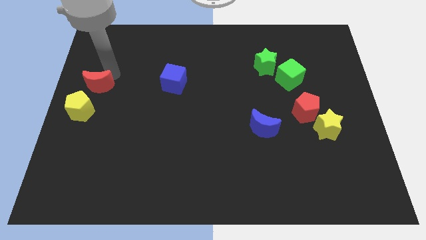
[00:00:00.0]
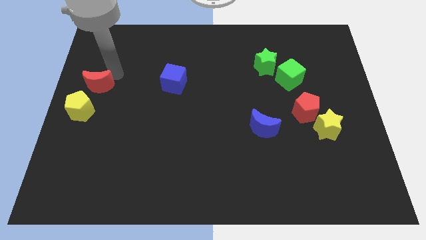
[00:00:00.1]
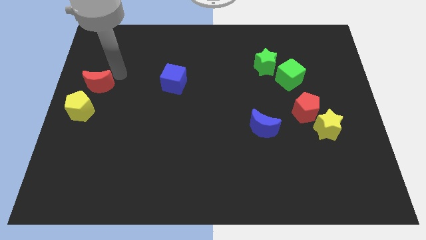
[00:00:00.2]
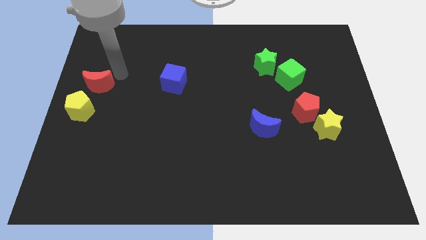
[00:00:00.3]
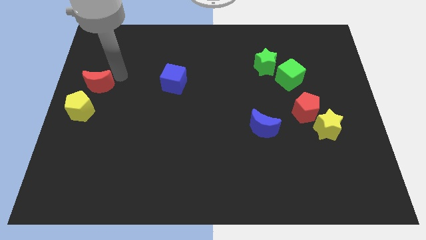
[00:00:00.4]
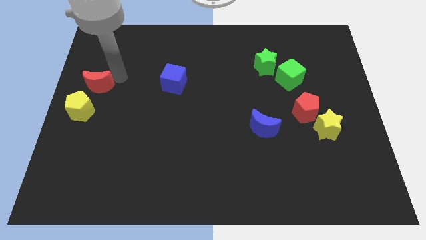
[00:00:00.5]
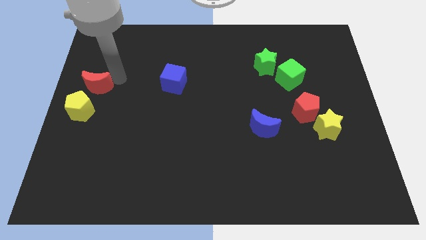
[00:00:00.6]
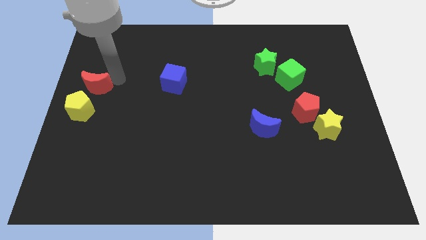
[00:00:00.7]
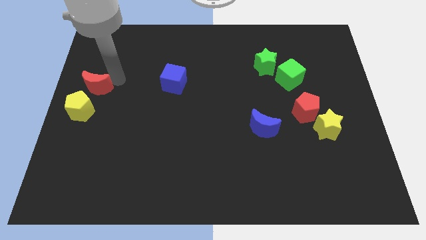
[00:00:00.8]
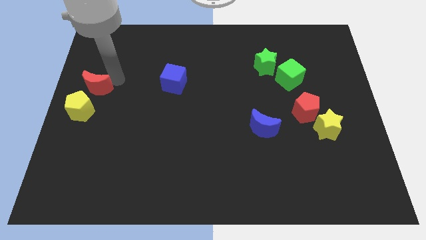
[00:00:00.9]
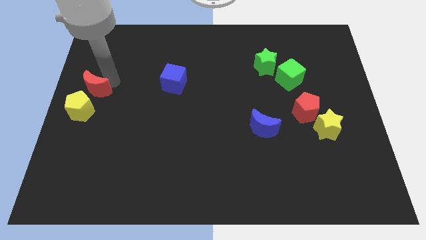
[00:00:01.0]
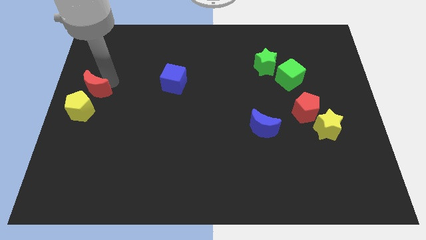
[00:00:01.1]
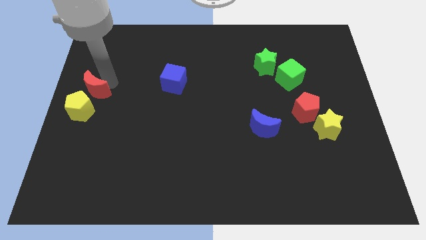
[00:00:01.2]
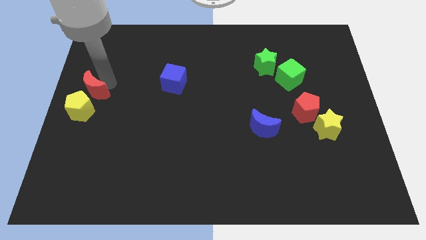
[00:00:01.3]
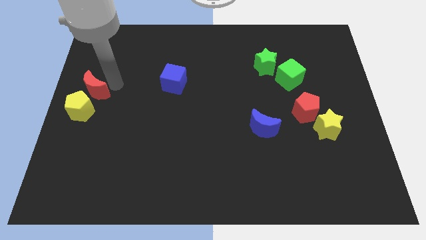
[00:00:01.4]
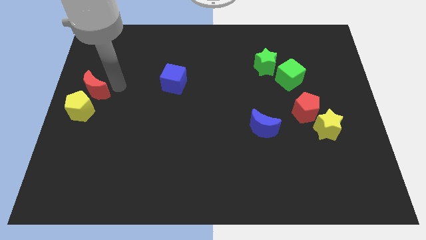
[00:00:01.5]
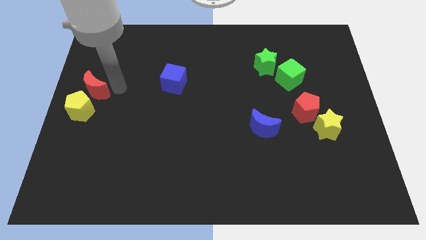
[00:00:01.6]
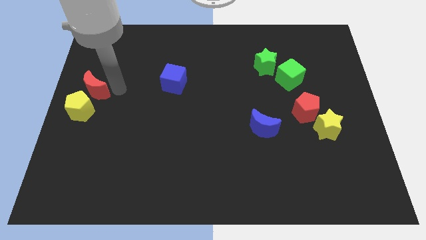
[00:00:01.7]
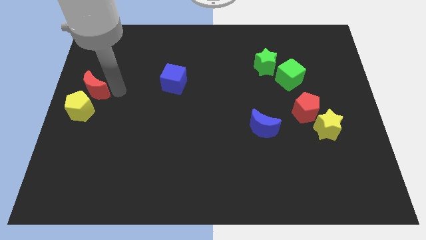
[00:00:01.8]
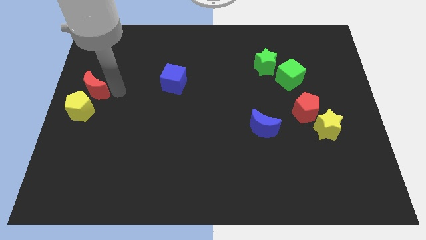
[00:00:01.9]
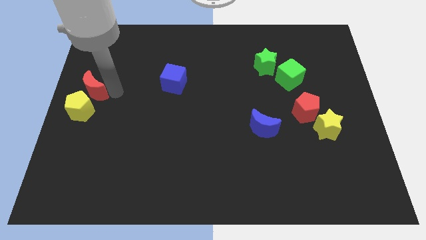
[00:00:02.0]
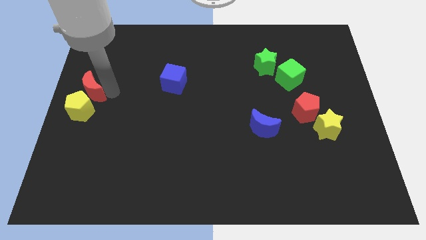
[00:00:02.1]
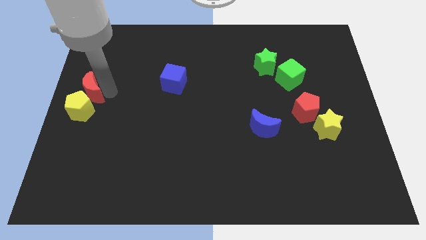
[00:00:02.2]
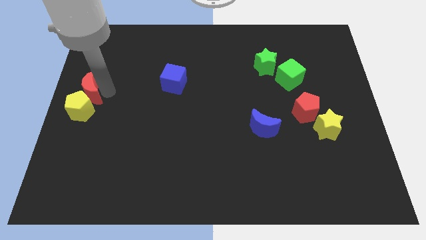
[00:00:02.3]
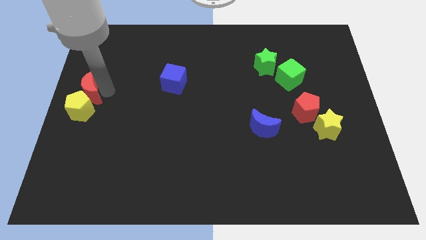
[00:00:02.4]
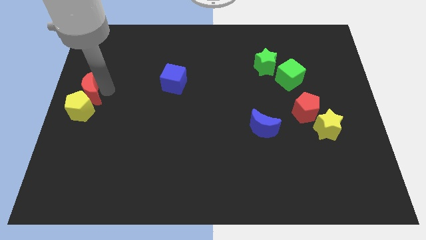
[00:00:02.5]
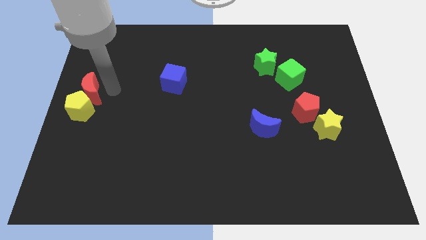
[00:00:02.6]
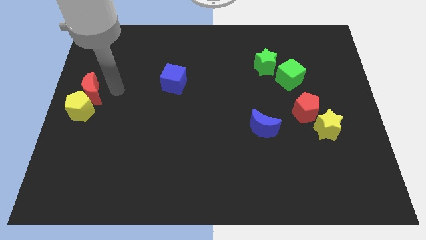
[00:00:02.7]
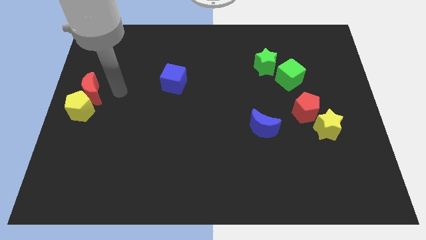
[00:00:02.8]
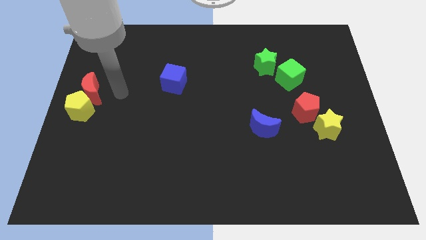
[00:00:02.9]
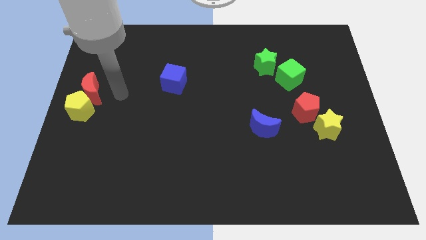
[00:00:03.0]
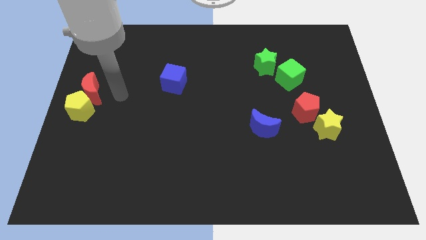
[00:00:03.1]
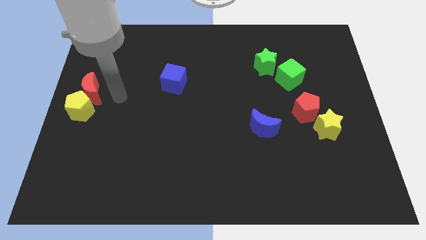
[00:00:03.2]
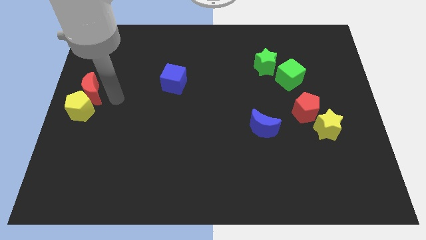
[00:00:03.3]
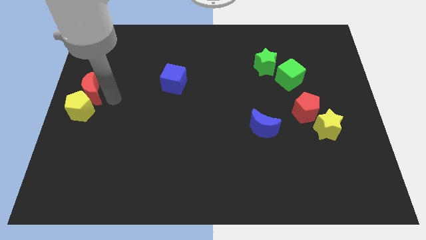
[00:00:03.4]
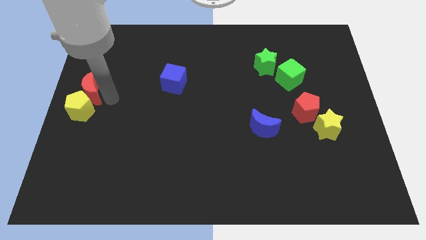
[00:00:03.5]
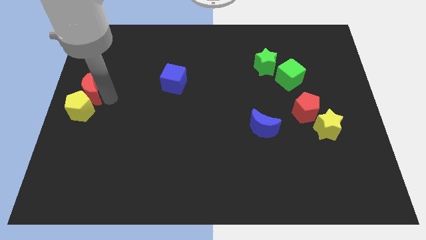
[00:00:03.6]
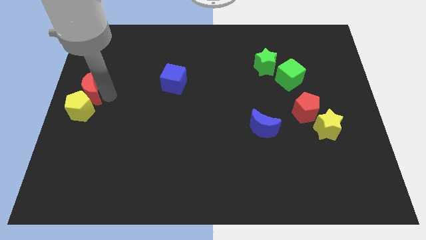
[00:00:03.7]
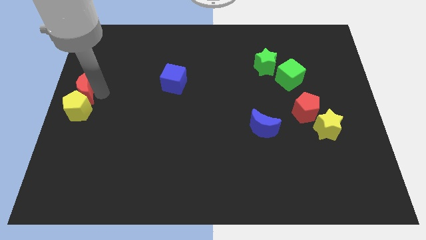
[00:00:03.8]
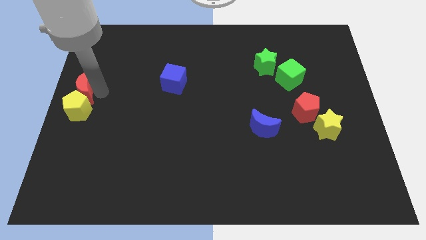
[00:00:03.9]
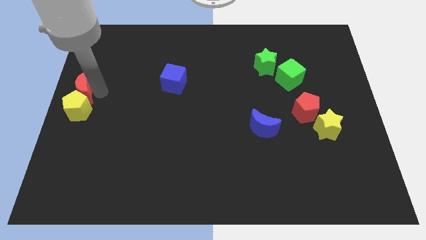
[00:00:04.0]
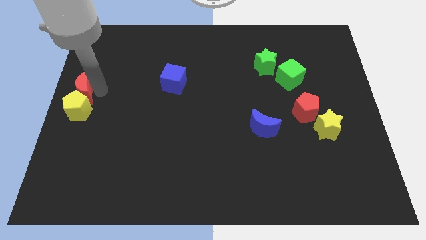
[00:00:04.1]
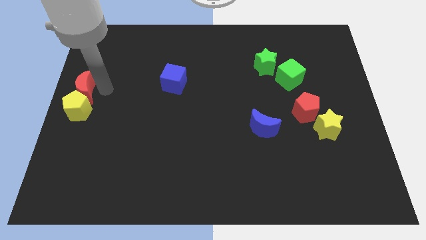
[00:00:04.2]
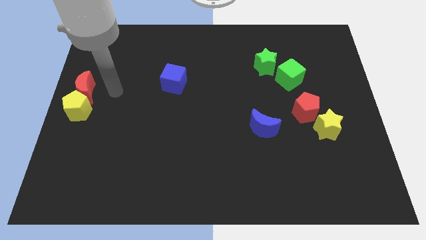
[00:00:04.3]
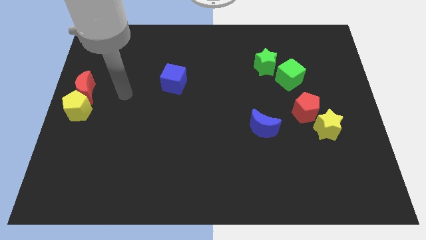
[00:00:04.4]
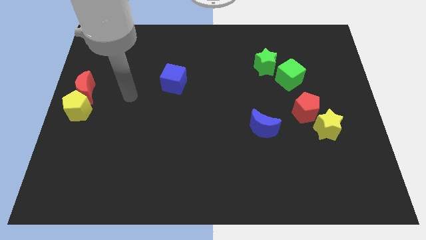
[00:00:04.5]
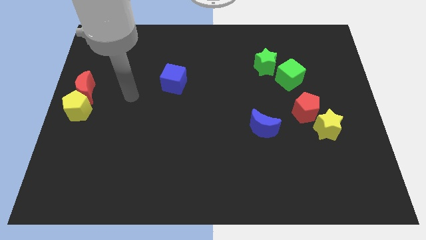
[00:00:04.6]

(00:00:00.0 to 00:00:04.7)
place the red crescent above the yellow pentagon

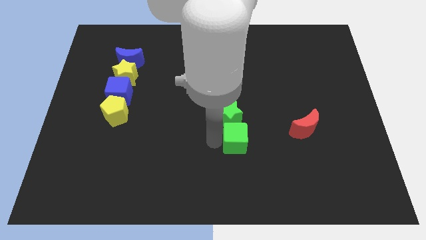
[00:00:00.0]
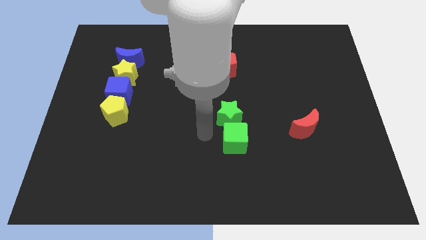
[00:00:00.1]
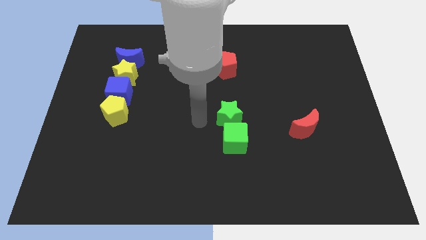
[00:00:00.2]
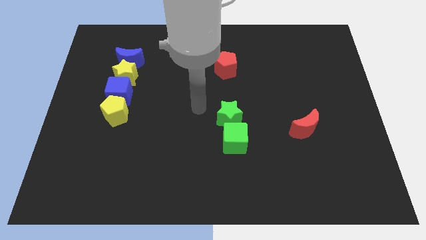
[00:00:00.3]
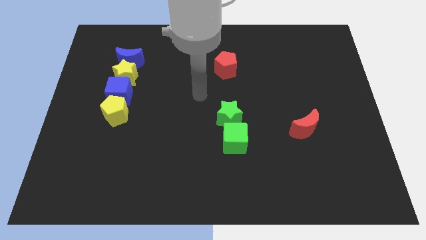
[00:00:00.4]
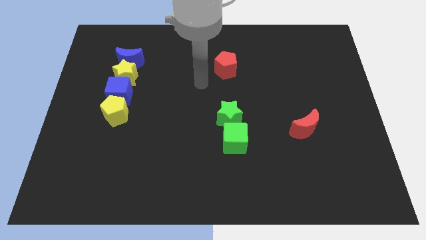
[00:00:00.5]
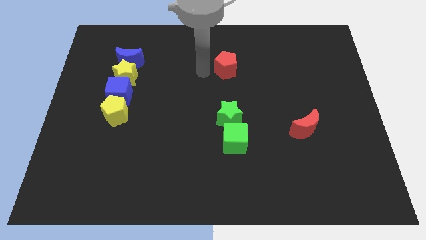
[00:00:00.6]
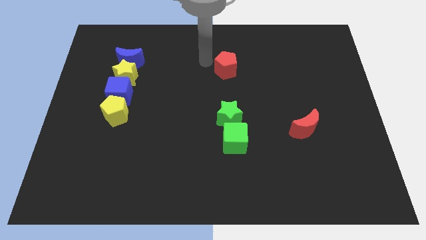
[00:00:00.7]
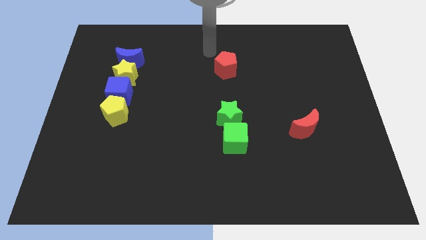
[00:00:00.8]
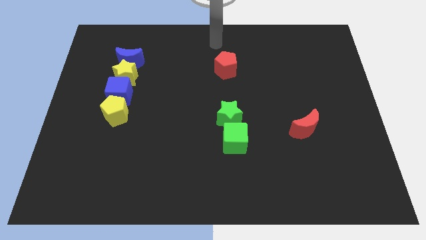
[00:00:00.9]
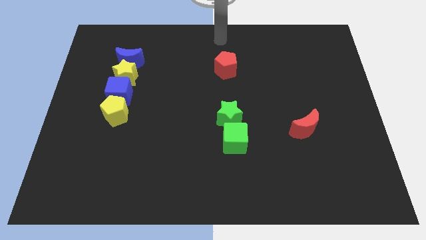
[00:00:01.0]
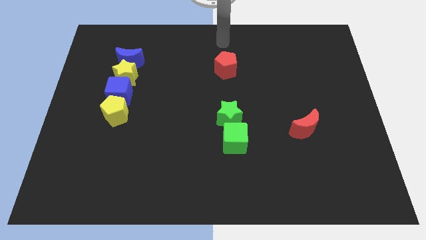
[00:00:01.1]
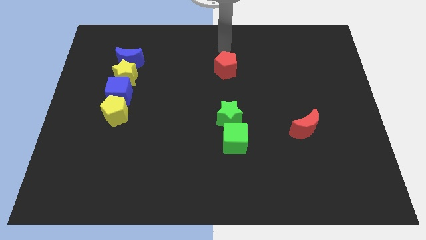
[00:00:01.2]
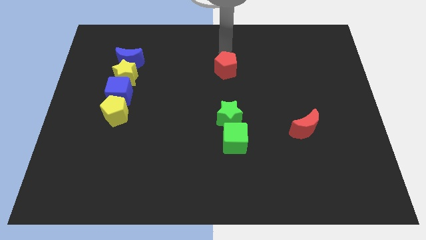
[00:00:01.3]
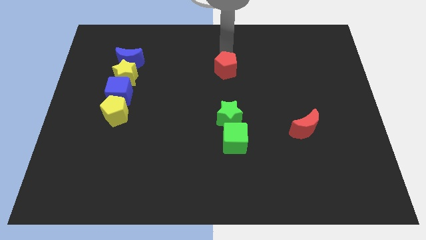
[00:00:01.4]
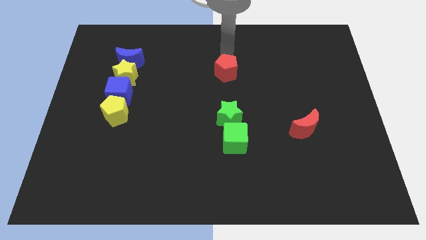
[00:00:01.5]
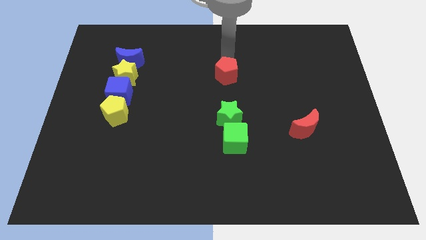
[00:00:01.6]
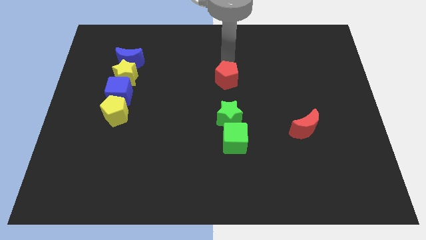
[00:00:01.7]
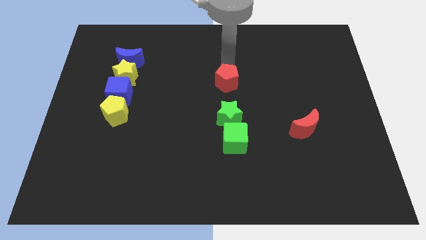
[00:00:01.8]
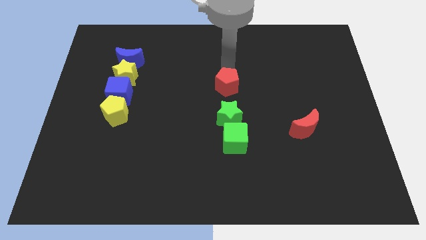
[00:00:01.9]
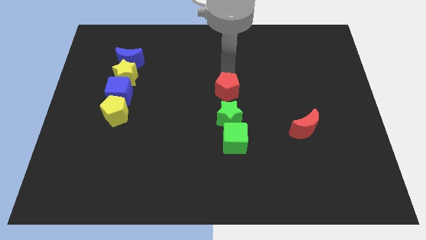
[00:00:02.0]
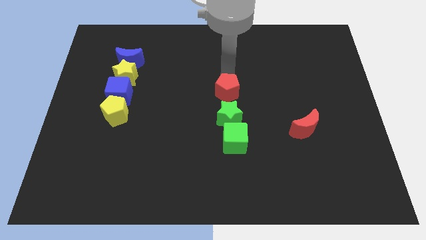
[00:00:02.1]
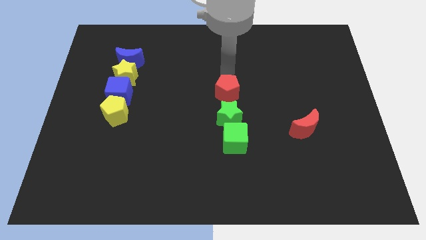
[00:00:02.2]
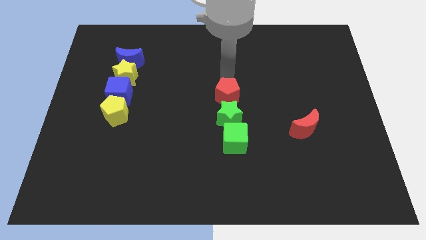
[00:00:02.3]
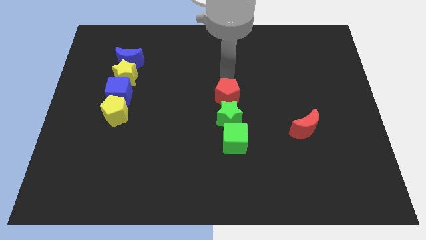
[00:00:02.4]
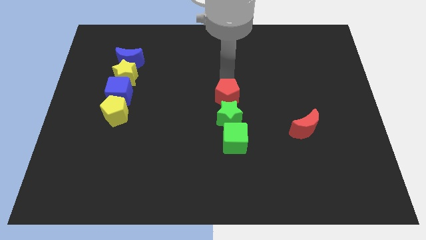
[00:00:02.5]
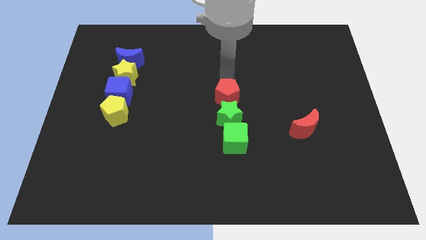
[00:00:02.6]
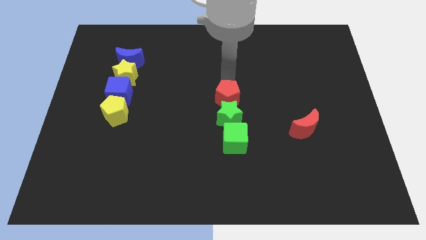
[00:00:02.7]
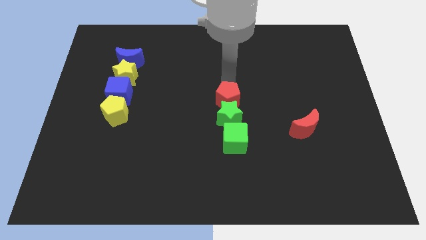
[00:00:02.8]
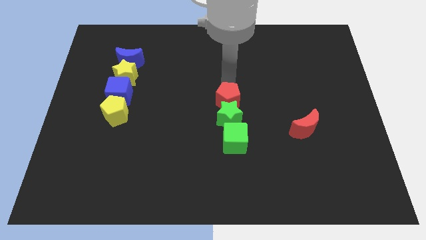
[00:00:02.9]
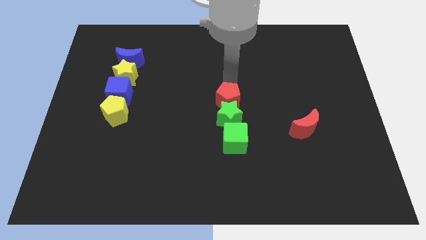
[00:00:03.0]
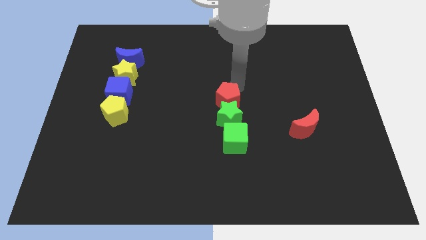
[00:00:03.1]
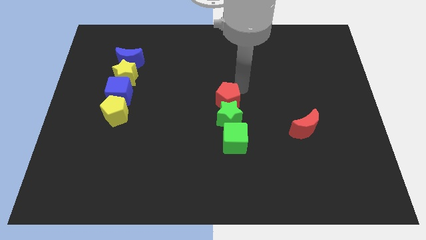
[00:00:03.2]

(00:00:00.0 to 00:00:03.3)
push the red pentagon into the green star

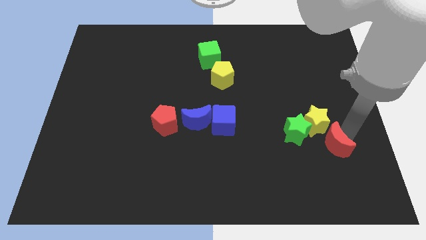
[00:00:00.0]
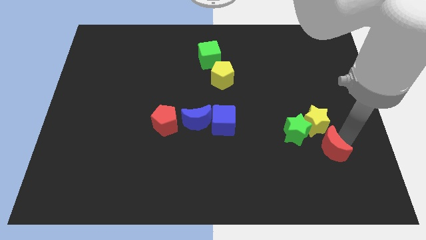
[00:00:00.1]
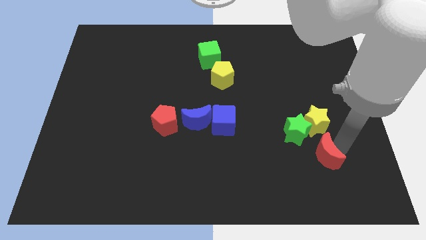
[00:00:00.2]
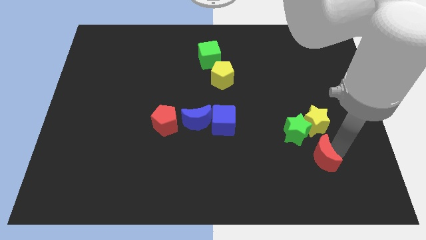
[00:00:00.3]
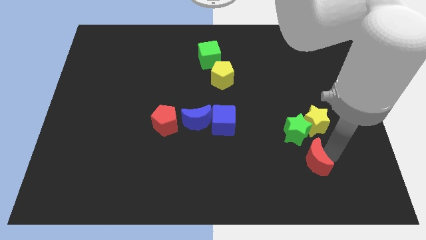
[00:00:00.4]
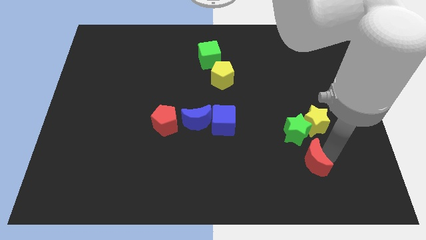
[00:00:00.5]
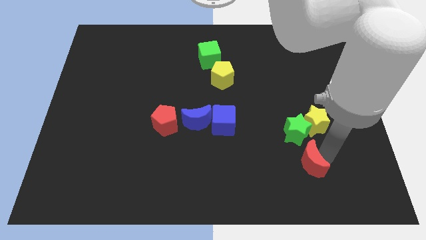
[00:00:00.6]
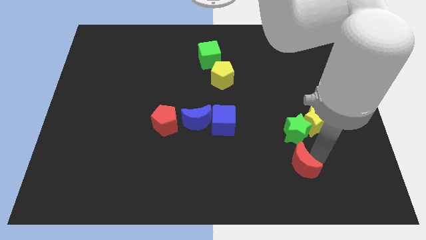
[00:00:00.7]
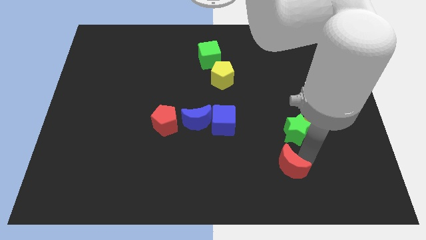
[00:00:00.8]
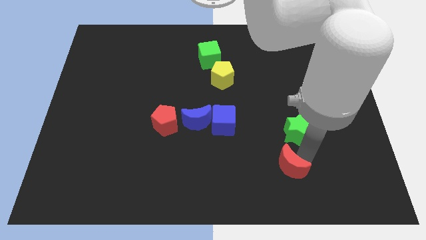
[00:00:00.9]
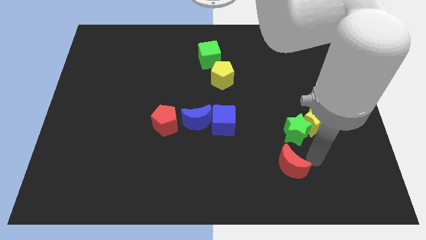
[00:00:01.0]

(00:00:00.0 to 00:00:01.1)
move the red crescent to the bottom of the green star
